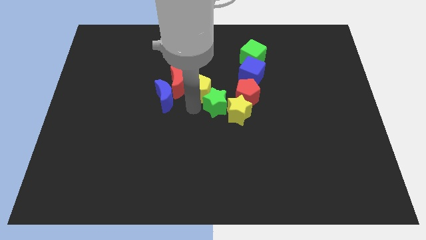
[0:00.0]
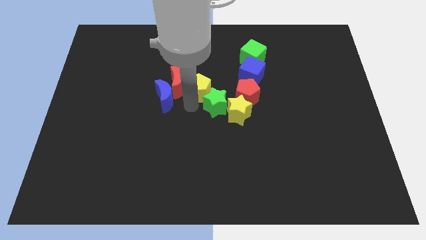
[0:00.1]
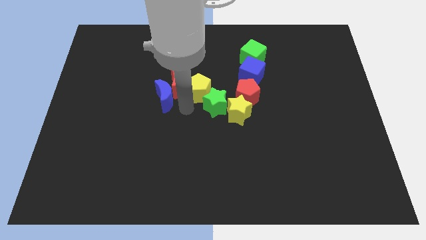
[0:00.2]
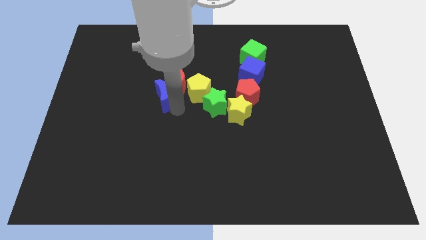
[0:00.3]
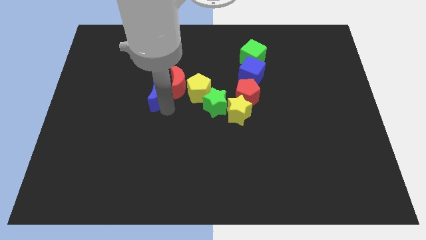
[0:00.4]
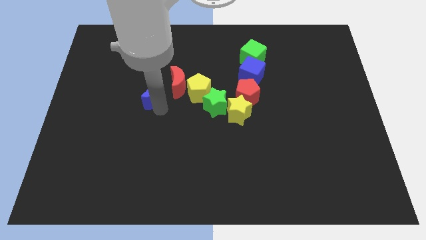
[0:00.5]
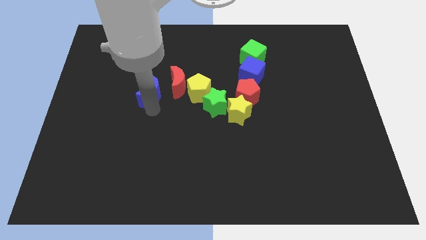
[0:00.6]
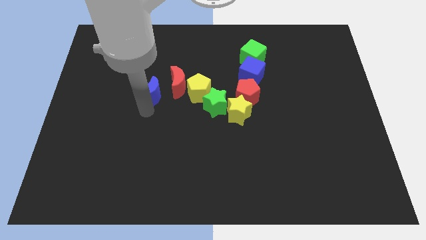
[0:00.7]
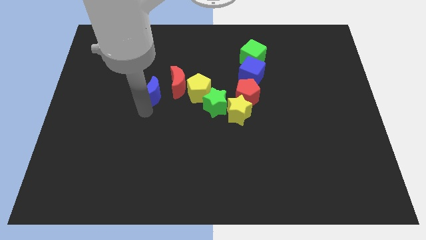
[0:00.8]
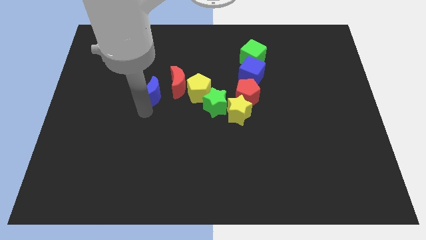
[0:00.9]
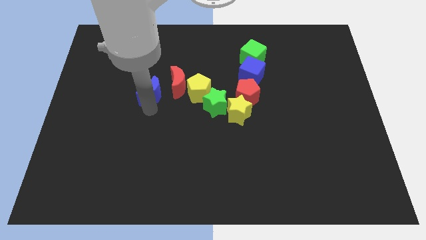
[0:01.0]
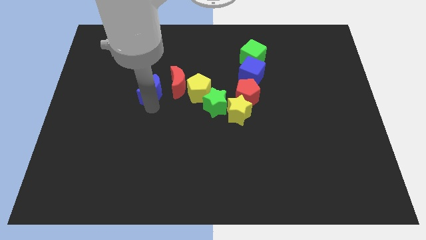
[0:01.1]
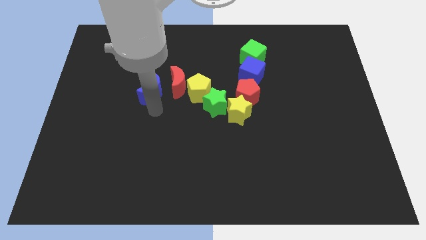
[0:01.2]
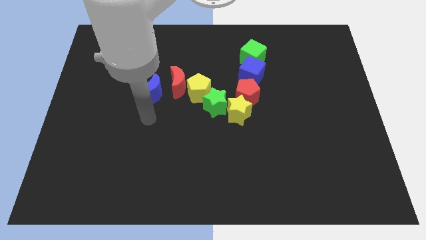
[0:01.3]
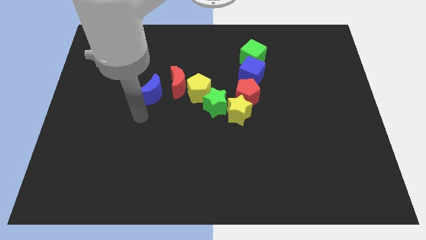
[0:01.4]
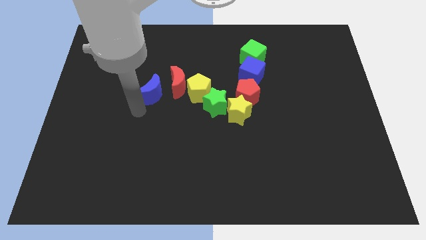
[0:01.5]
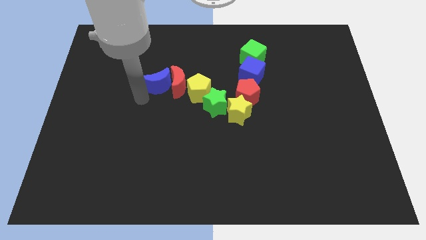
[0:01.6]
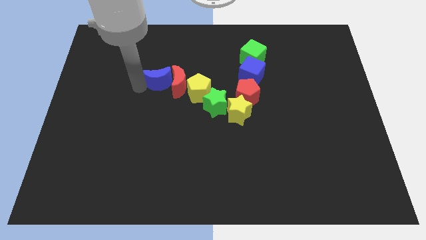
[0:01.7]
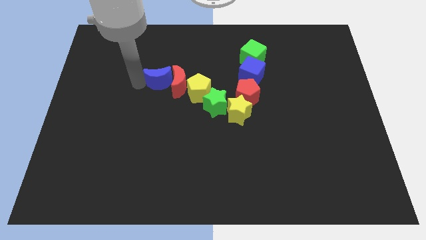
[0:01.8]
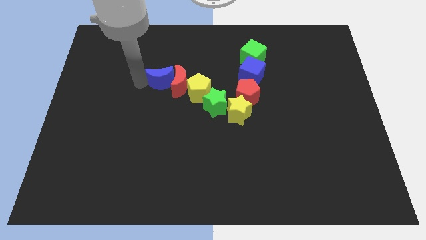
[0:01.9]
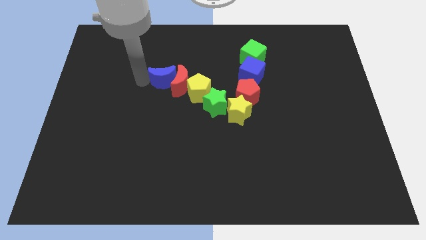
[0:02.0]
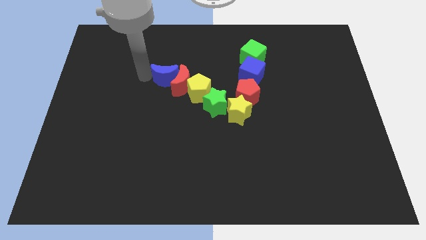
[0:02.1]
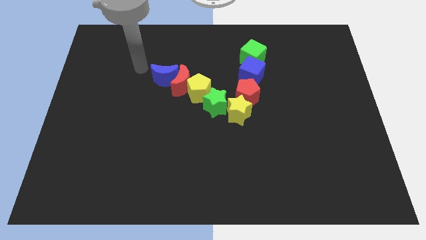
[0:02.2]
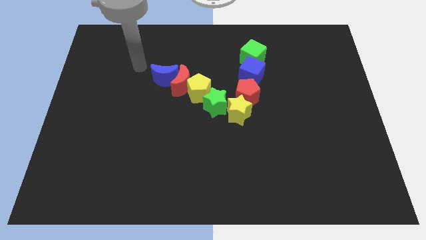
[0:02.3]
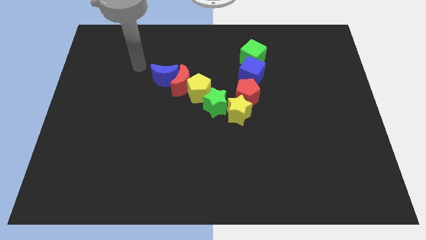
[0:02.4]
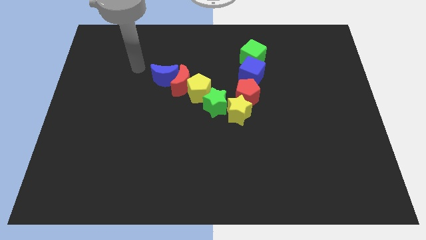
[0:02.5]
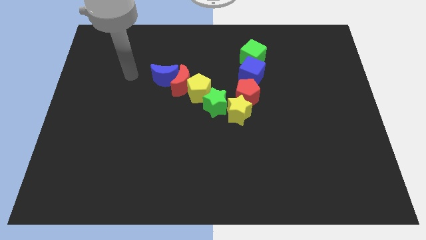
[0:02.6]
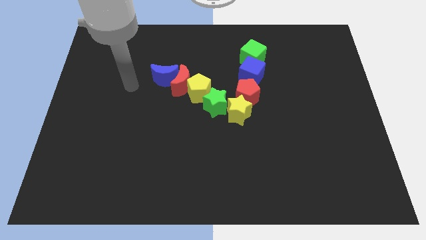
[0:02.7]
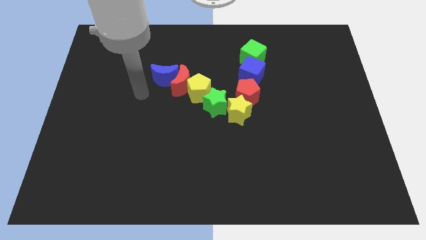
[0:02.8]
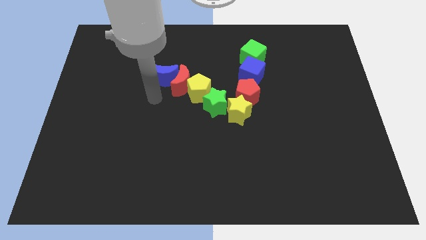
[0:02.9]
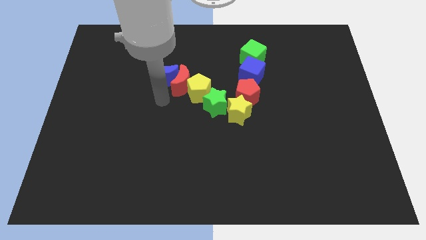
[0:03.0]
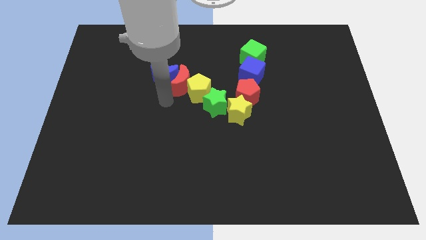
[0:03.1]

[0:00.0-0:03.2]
make a vshape of blocks at the center of the board

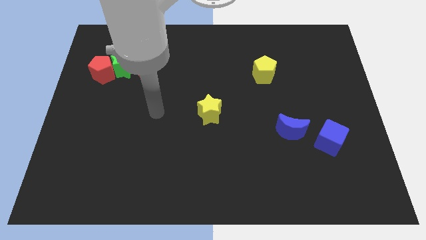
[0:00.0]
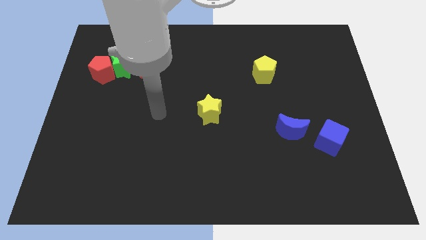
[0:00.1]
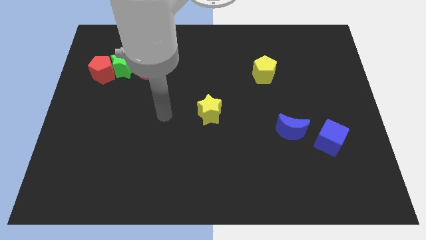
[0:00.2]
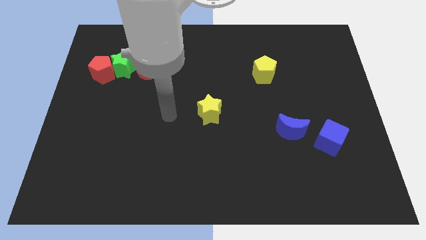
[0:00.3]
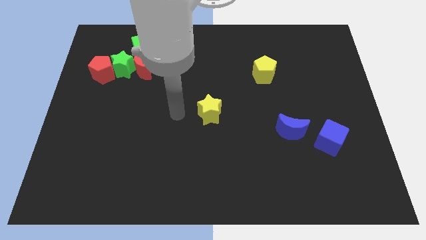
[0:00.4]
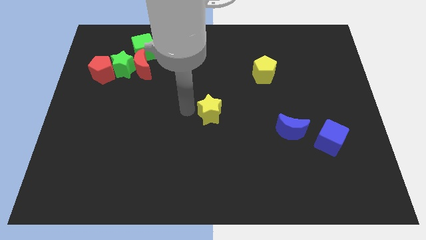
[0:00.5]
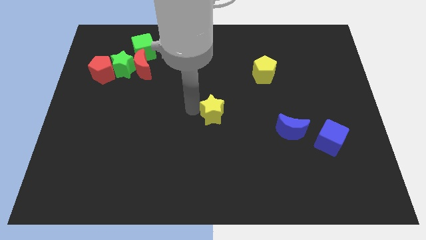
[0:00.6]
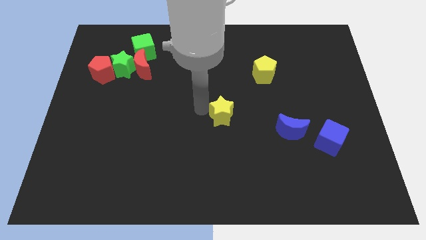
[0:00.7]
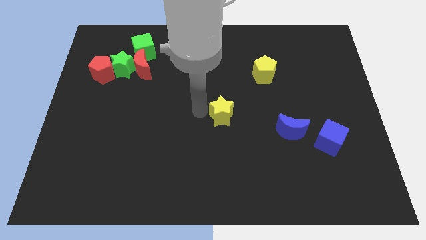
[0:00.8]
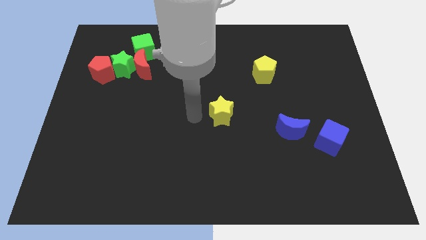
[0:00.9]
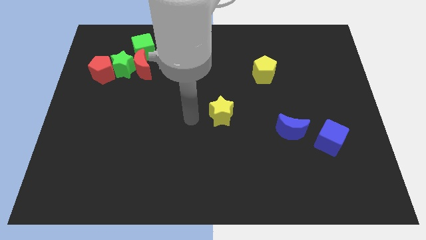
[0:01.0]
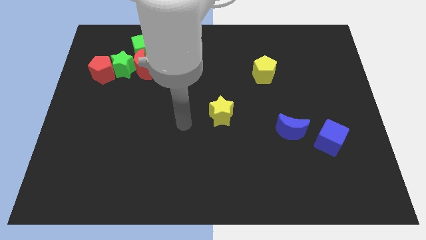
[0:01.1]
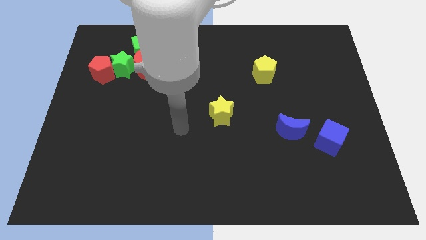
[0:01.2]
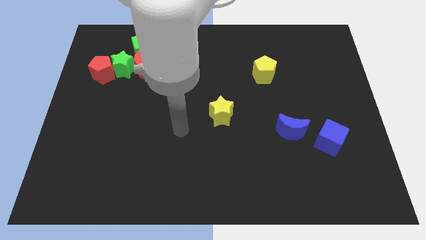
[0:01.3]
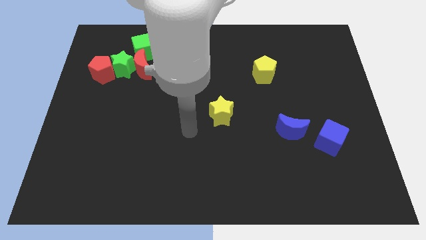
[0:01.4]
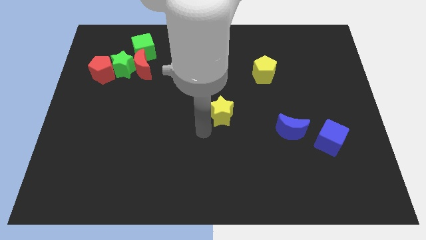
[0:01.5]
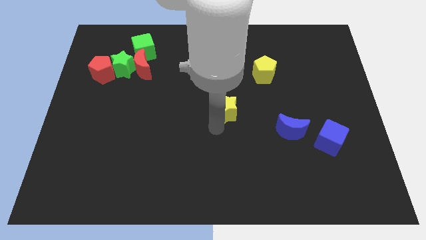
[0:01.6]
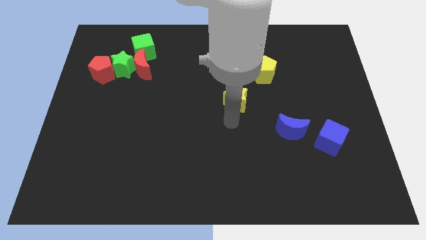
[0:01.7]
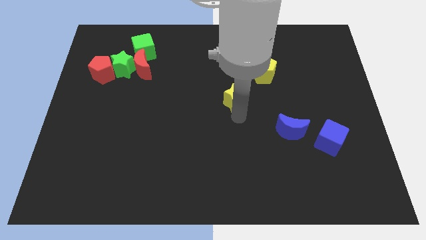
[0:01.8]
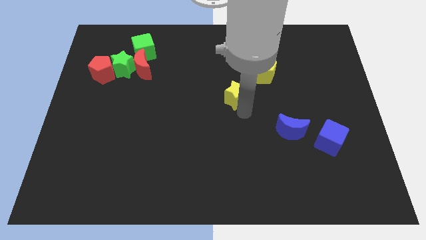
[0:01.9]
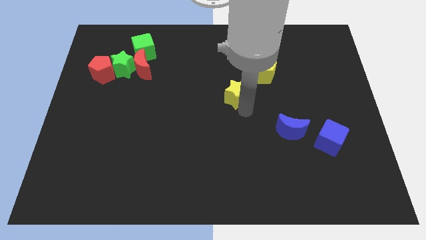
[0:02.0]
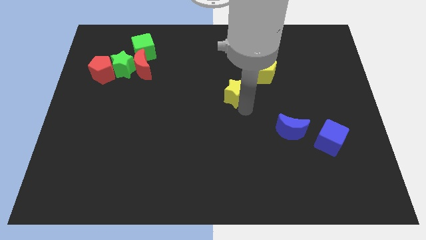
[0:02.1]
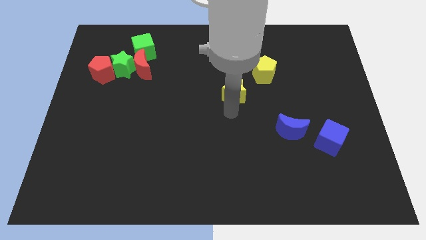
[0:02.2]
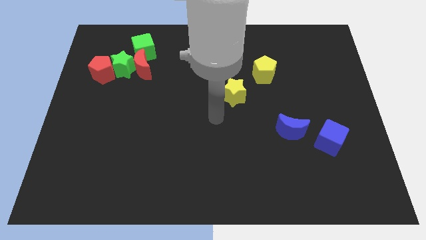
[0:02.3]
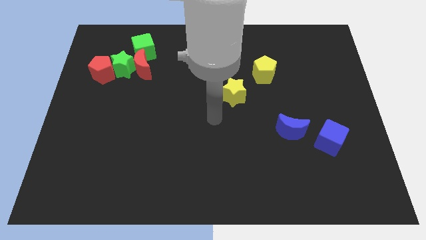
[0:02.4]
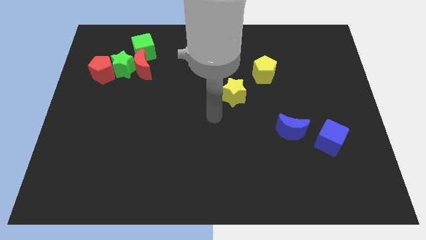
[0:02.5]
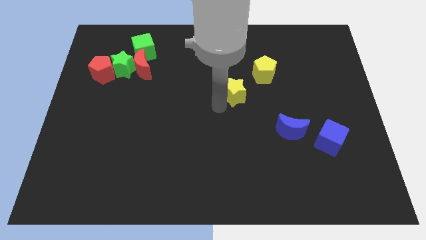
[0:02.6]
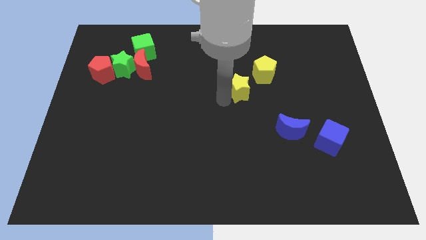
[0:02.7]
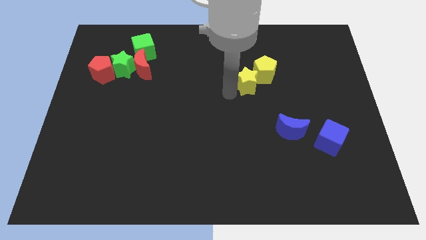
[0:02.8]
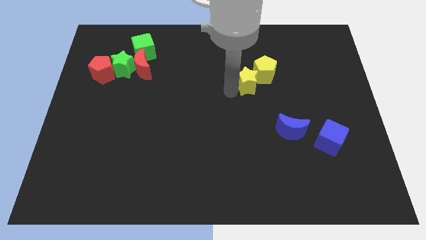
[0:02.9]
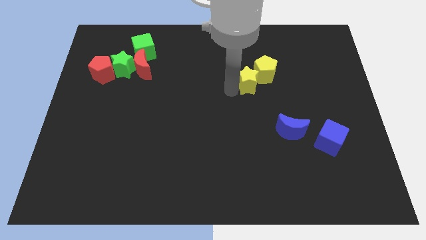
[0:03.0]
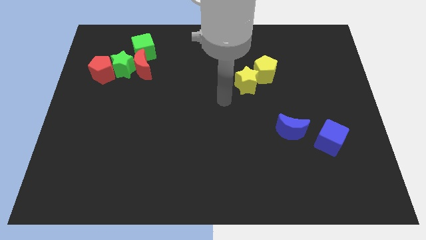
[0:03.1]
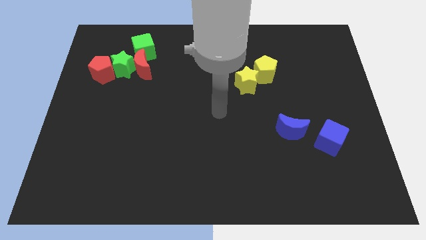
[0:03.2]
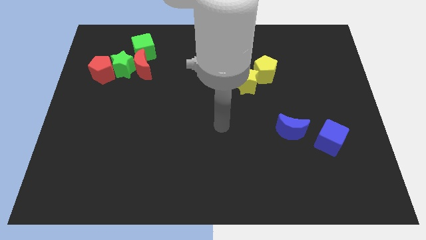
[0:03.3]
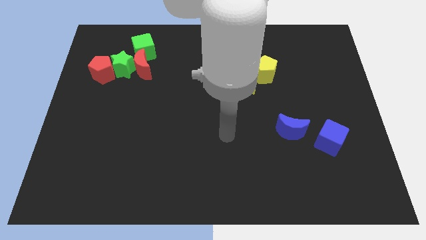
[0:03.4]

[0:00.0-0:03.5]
push the yellow star into yellow pentagon

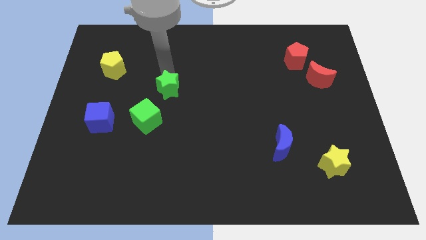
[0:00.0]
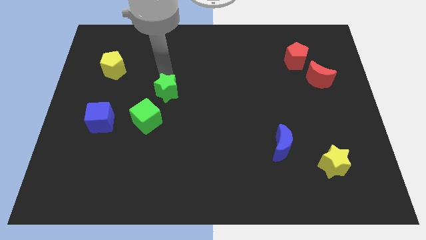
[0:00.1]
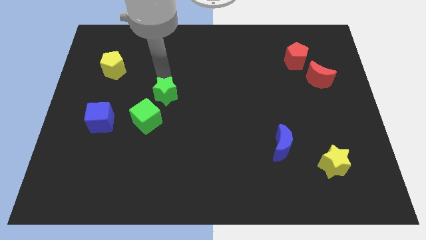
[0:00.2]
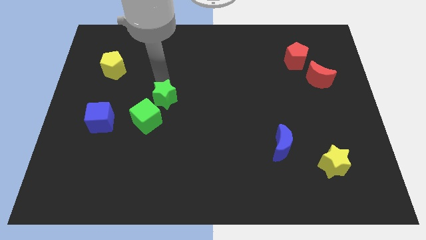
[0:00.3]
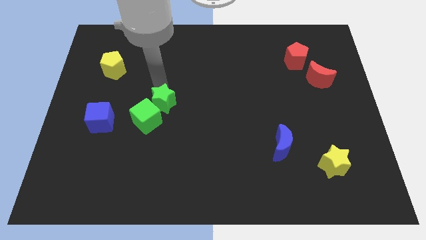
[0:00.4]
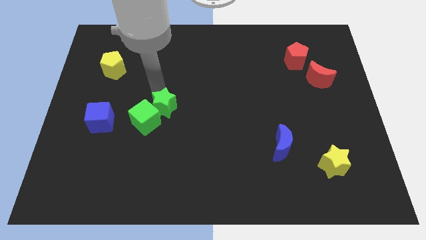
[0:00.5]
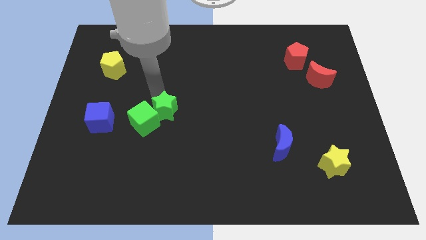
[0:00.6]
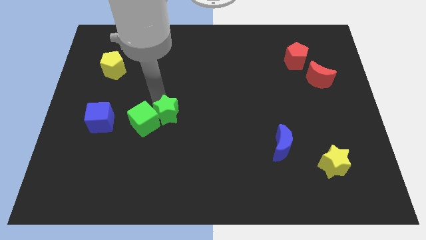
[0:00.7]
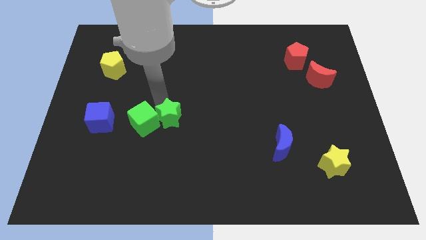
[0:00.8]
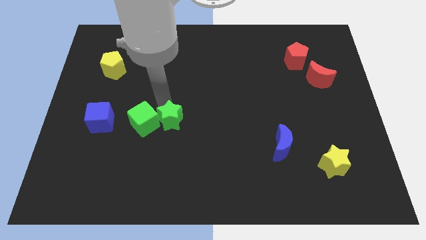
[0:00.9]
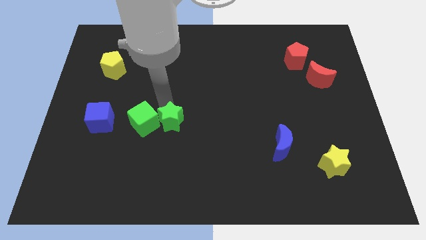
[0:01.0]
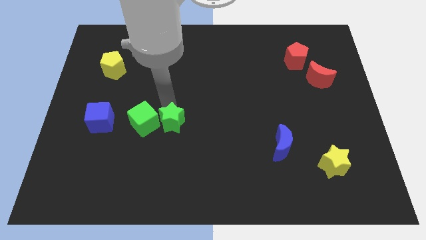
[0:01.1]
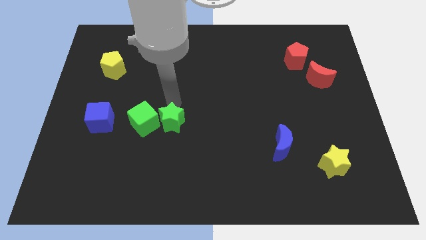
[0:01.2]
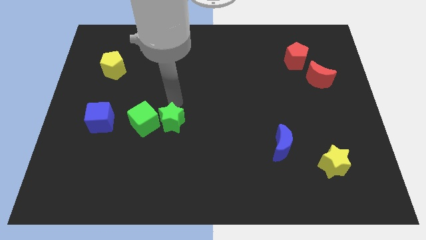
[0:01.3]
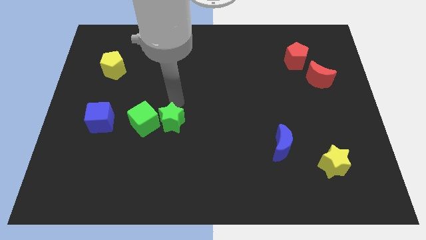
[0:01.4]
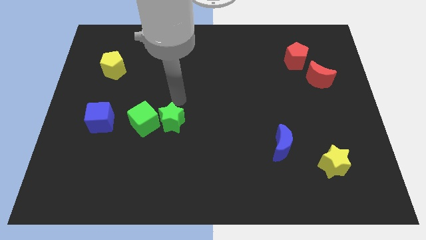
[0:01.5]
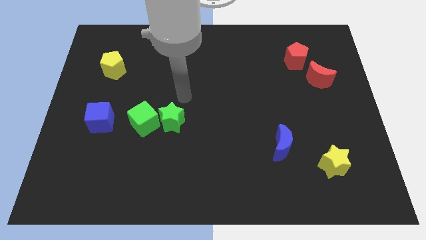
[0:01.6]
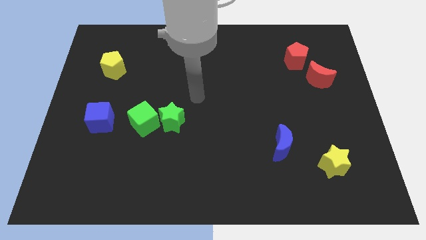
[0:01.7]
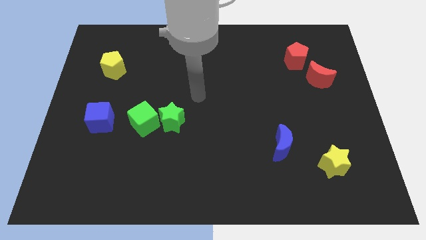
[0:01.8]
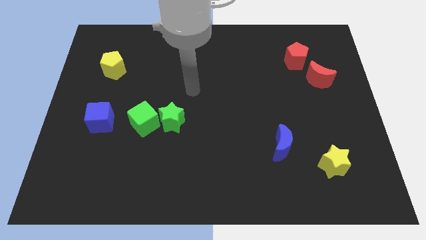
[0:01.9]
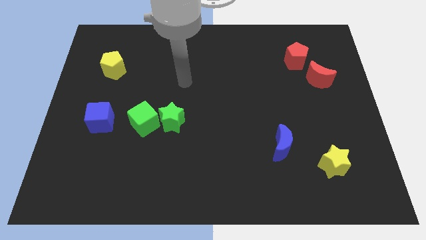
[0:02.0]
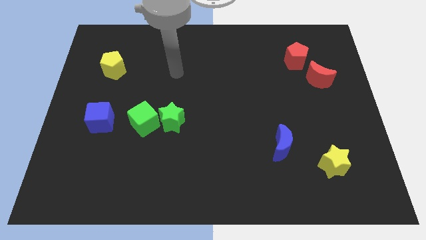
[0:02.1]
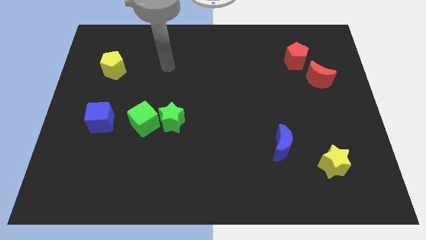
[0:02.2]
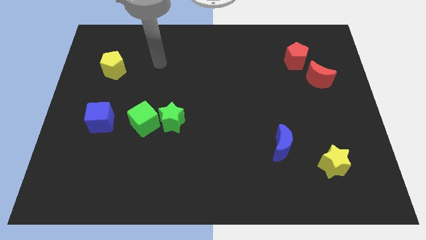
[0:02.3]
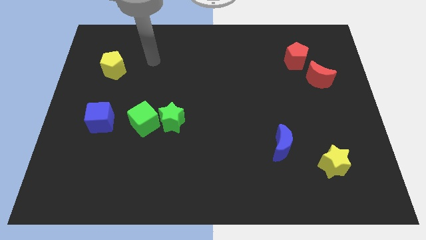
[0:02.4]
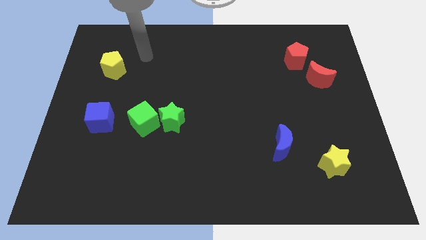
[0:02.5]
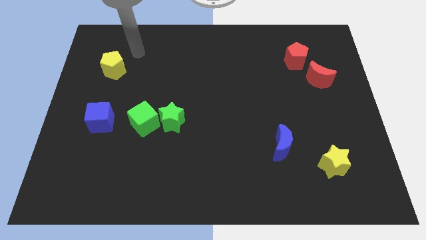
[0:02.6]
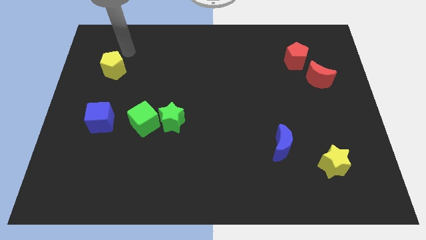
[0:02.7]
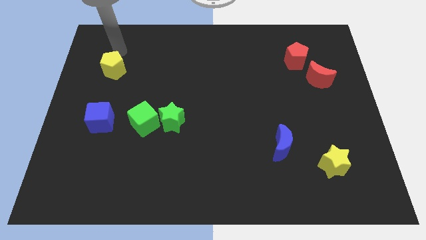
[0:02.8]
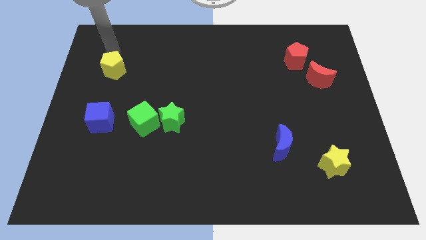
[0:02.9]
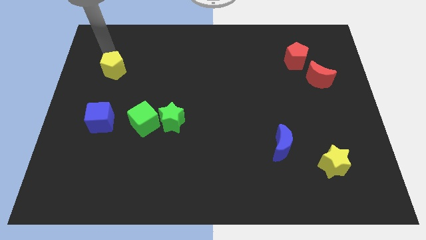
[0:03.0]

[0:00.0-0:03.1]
put the green star parallel right to the green cube
